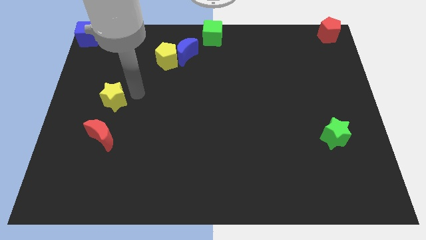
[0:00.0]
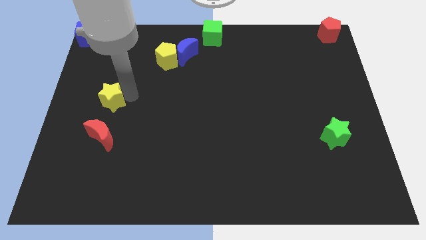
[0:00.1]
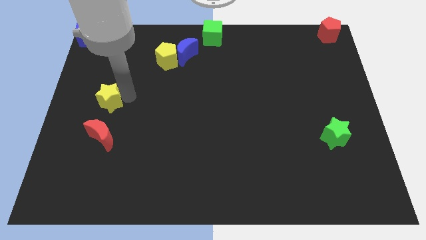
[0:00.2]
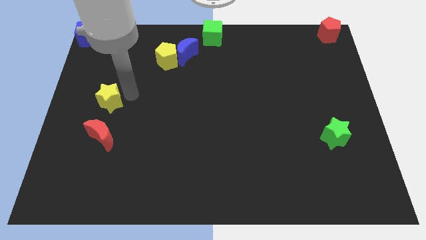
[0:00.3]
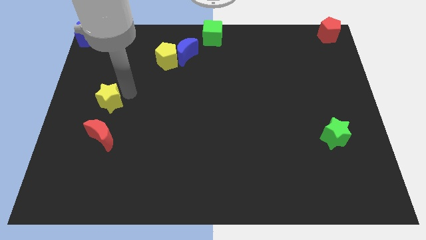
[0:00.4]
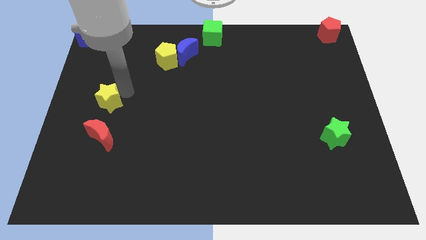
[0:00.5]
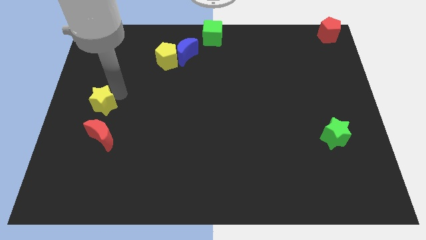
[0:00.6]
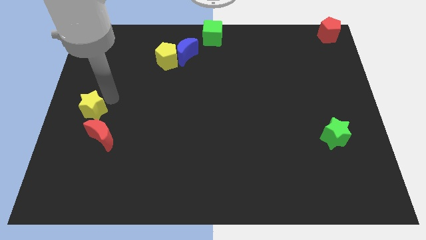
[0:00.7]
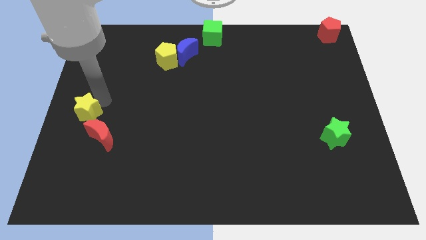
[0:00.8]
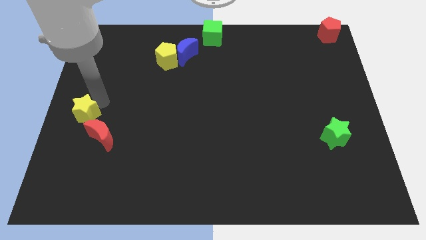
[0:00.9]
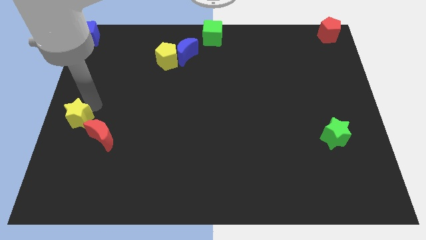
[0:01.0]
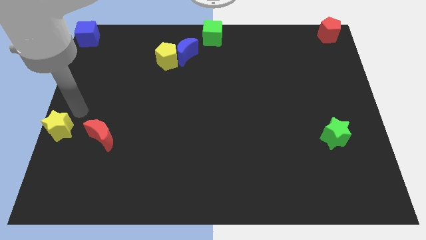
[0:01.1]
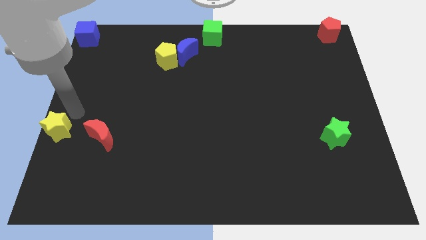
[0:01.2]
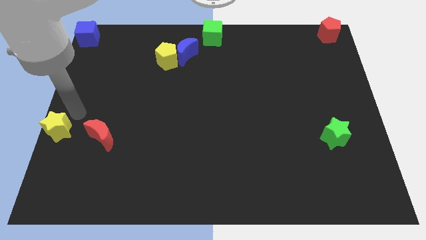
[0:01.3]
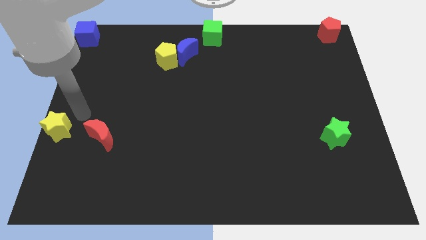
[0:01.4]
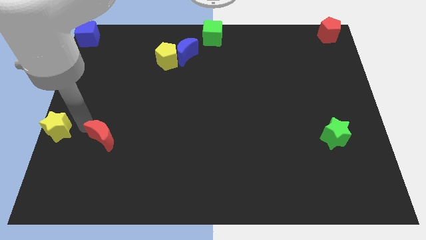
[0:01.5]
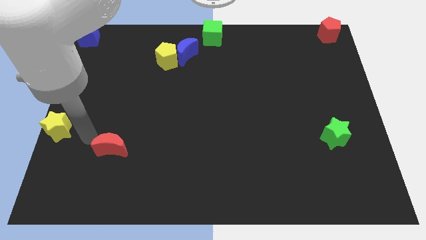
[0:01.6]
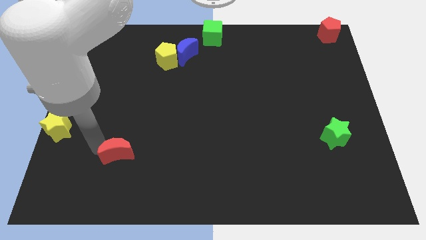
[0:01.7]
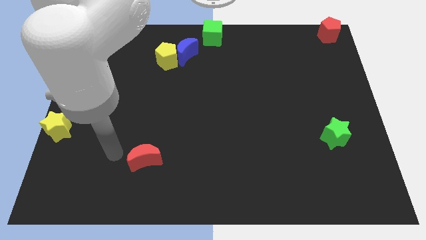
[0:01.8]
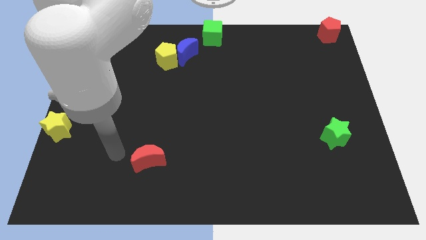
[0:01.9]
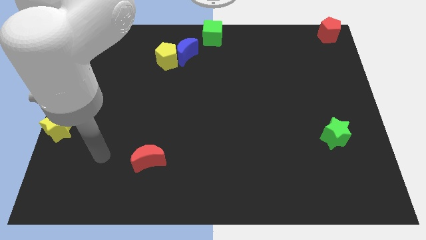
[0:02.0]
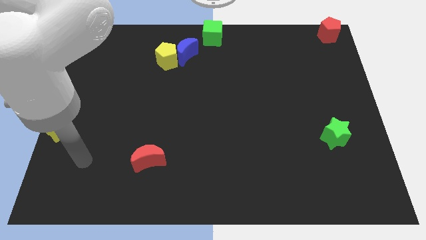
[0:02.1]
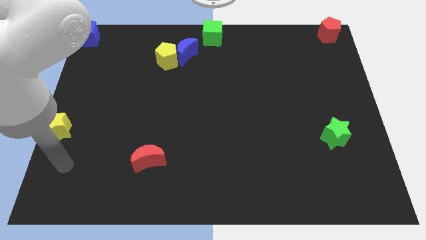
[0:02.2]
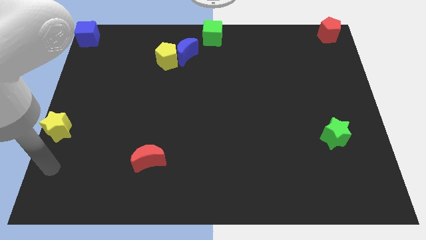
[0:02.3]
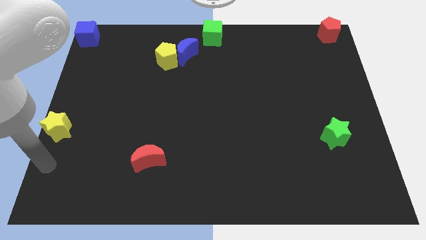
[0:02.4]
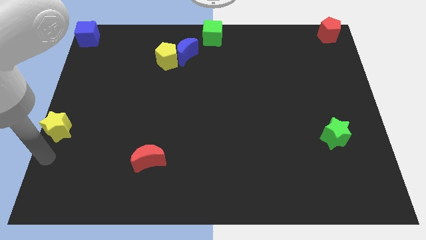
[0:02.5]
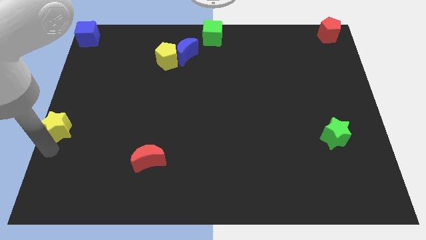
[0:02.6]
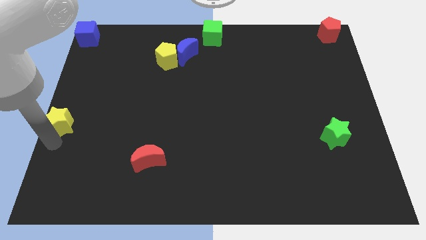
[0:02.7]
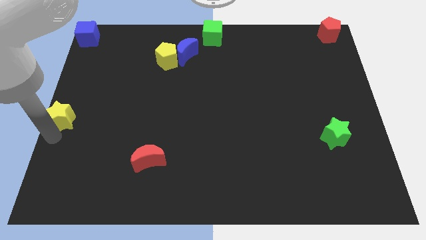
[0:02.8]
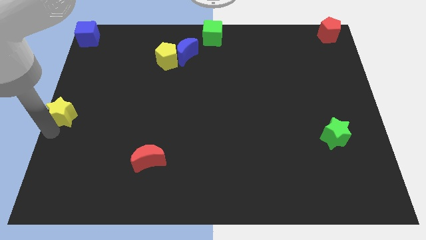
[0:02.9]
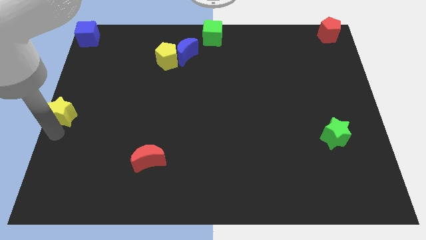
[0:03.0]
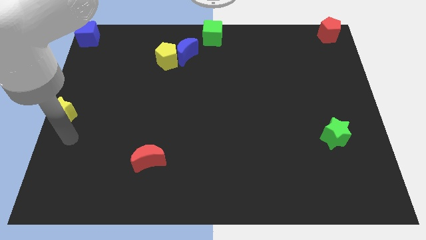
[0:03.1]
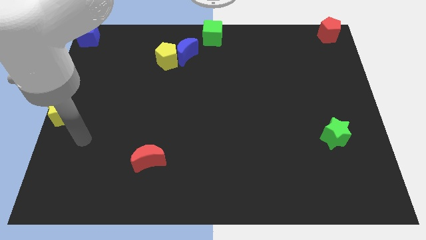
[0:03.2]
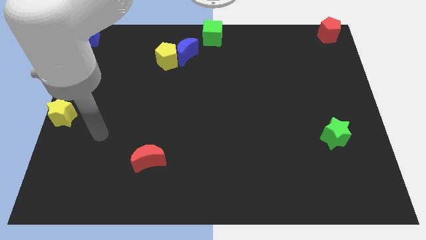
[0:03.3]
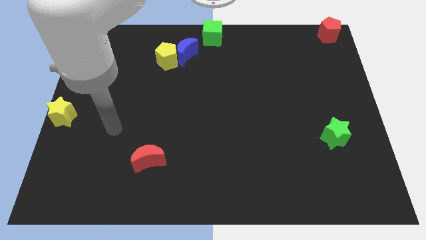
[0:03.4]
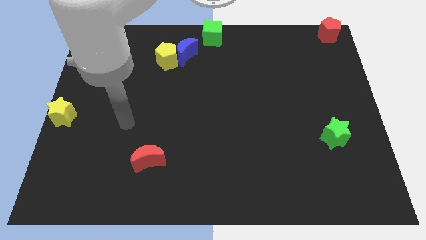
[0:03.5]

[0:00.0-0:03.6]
separate the red moon and yellow star

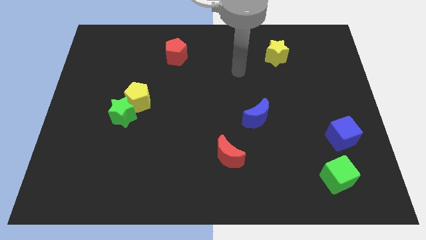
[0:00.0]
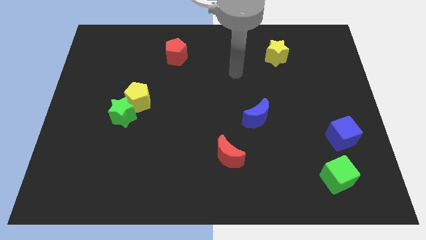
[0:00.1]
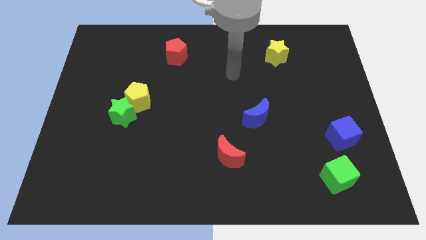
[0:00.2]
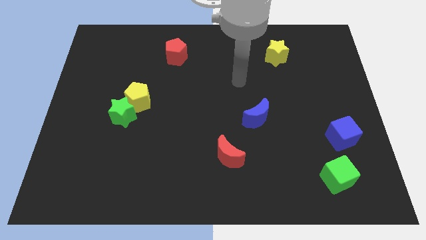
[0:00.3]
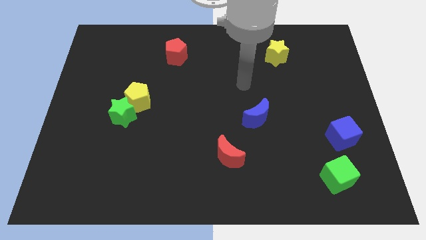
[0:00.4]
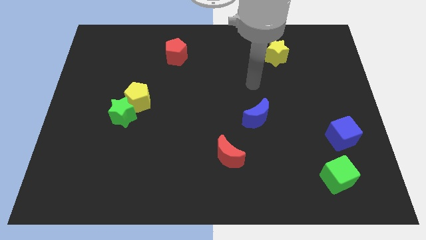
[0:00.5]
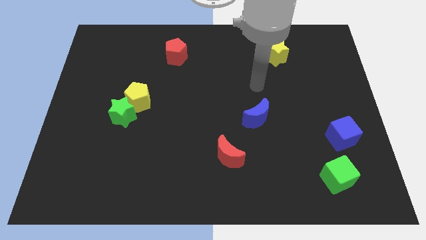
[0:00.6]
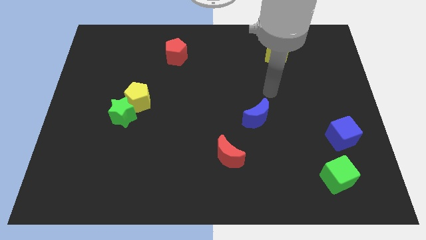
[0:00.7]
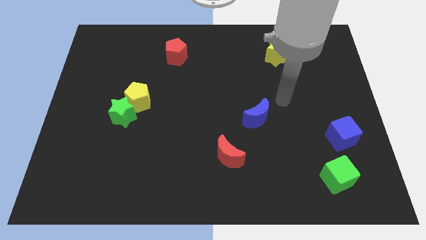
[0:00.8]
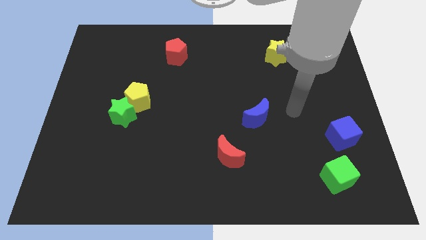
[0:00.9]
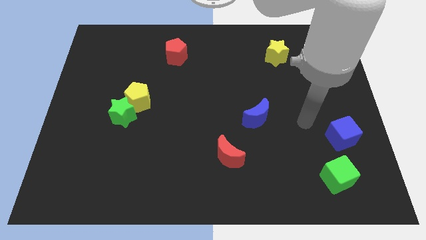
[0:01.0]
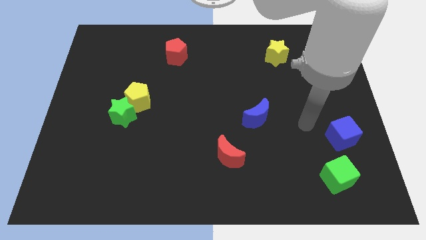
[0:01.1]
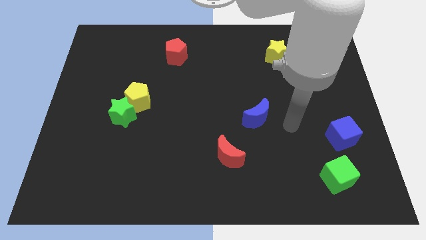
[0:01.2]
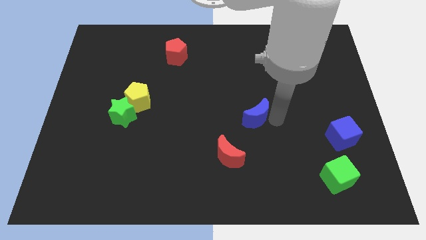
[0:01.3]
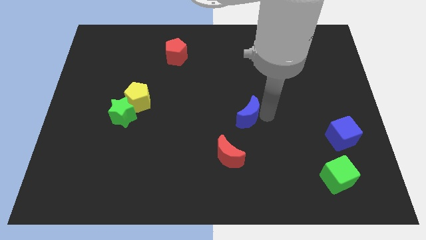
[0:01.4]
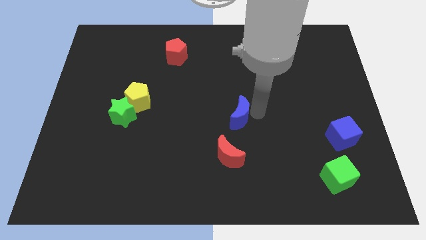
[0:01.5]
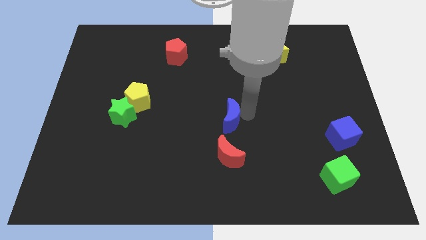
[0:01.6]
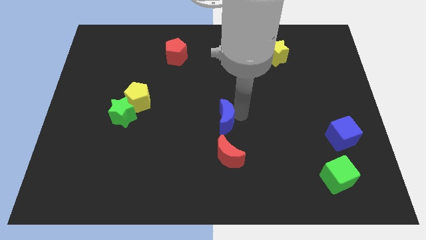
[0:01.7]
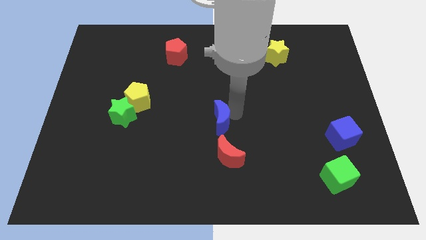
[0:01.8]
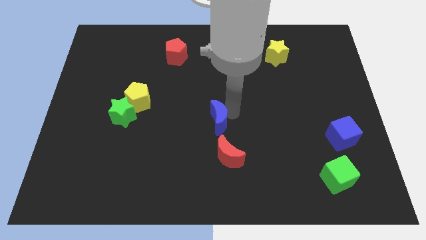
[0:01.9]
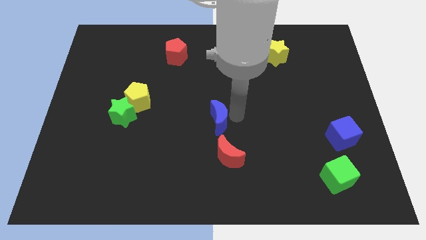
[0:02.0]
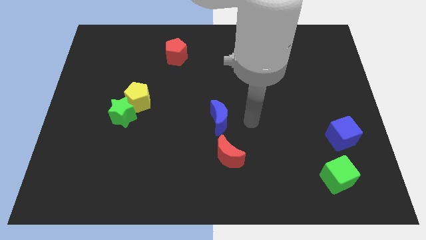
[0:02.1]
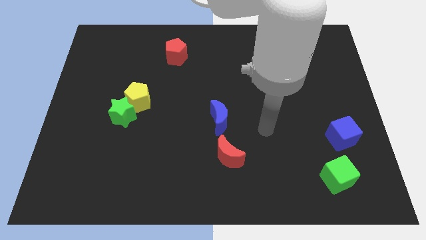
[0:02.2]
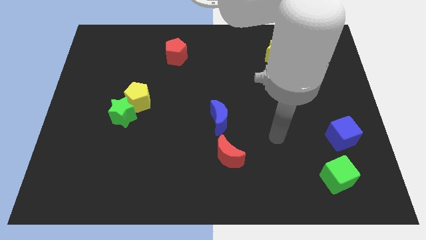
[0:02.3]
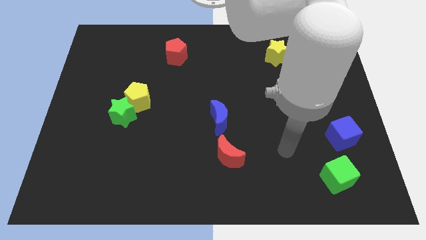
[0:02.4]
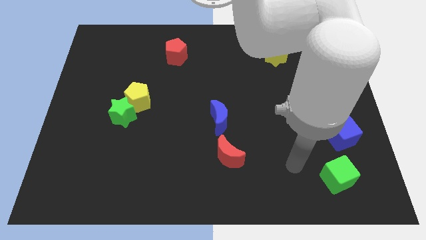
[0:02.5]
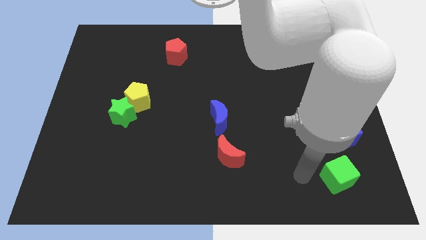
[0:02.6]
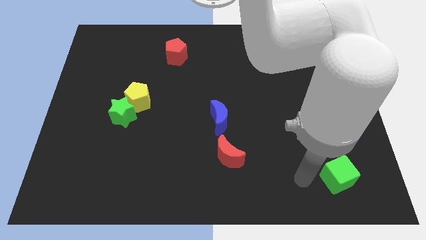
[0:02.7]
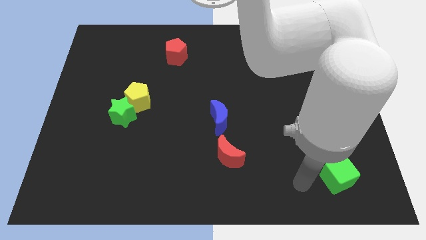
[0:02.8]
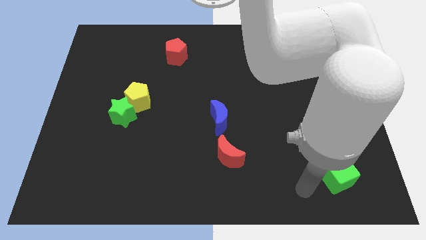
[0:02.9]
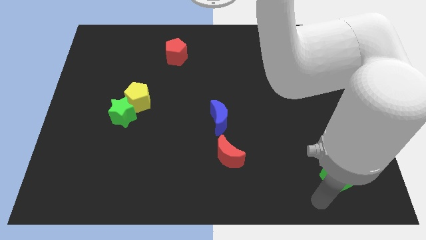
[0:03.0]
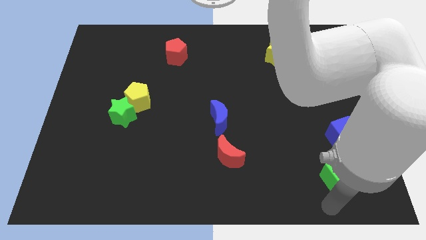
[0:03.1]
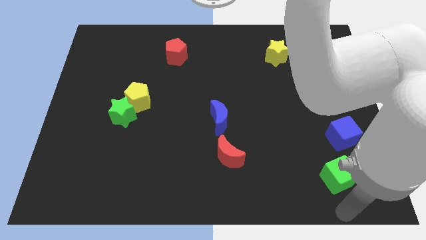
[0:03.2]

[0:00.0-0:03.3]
place the blue moon at the center of the board

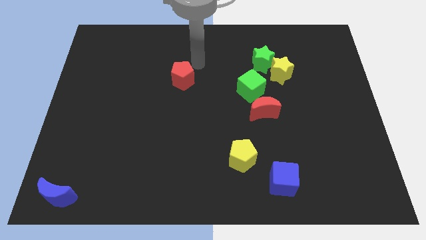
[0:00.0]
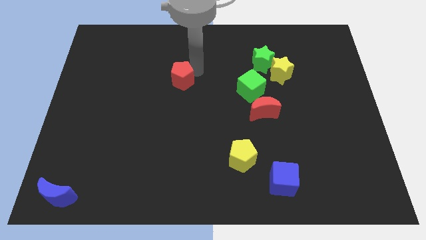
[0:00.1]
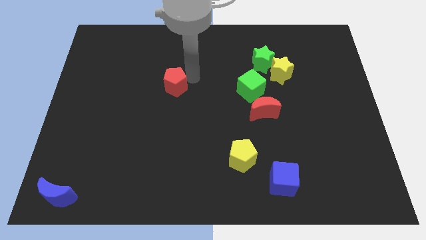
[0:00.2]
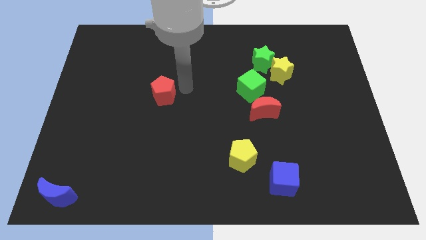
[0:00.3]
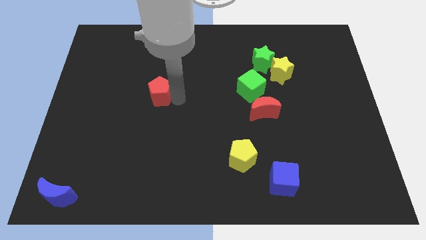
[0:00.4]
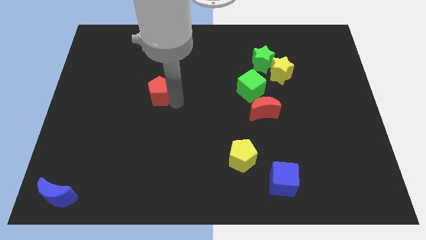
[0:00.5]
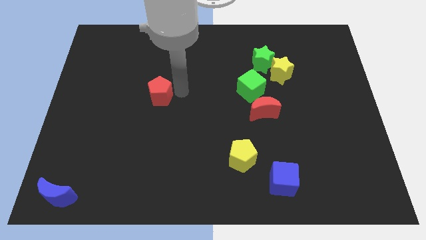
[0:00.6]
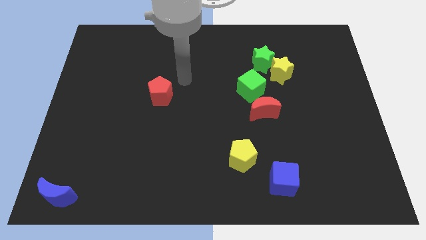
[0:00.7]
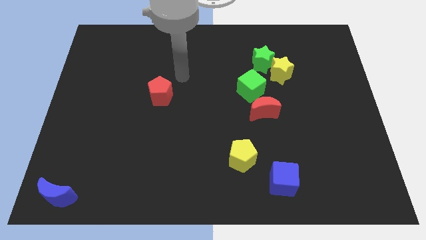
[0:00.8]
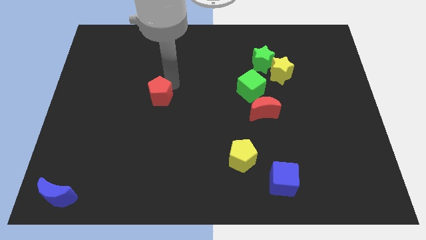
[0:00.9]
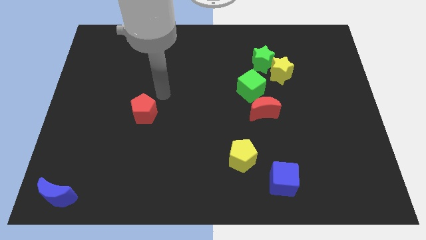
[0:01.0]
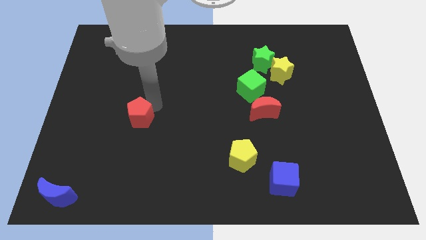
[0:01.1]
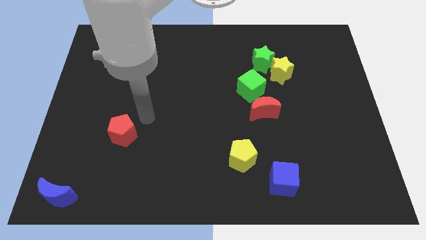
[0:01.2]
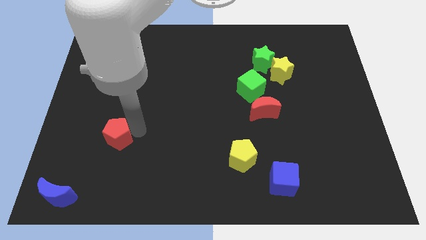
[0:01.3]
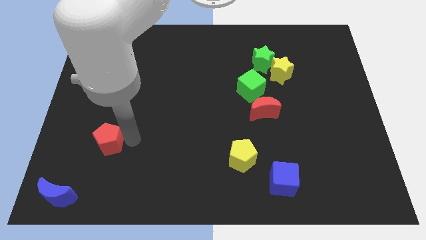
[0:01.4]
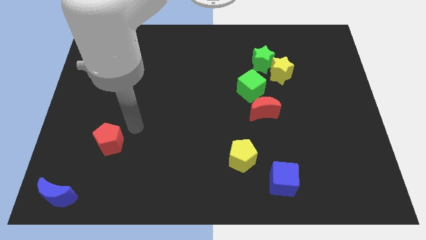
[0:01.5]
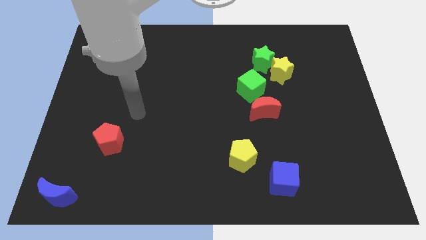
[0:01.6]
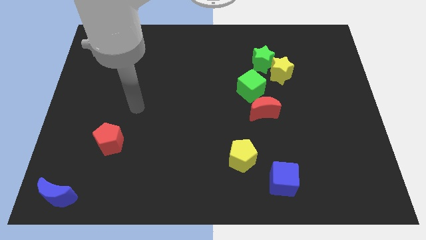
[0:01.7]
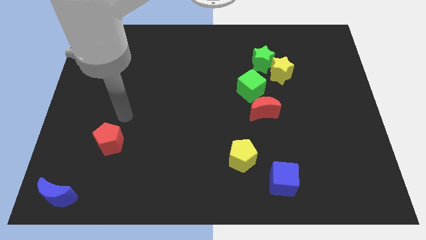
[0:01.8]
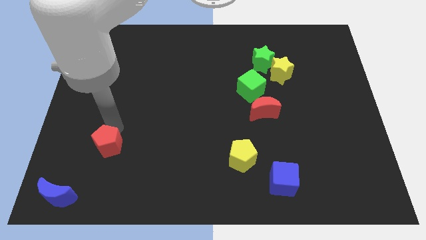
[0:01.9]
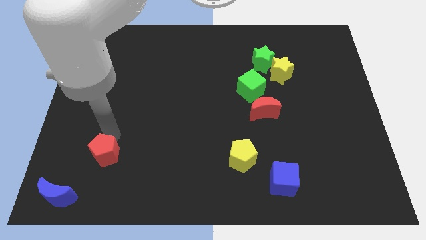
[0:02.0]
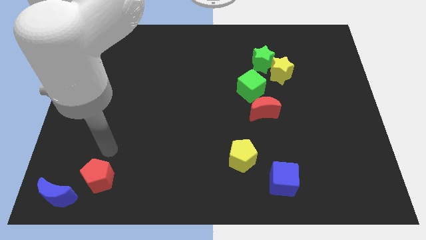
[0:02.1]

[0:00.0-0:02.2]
move the red pentagon towards blue crescent
